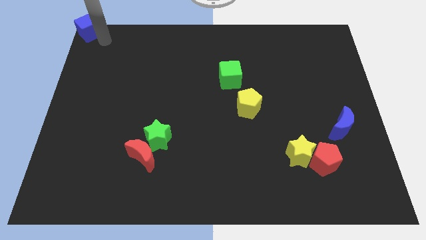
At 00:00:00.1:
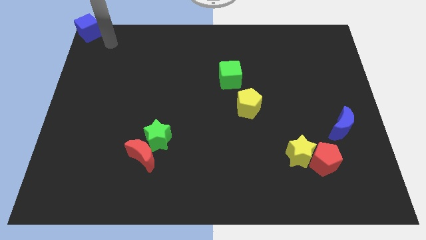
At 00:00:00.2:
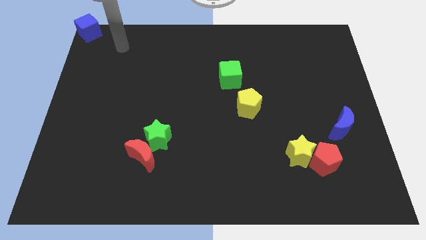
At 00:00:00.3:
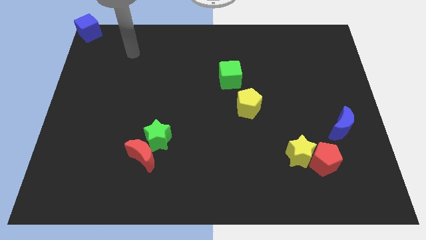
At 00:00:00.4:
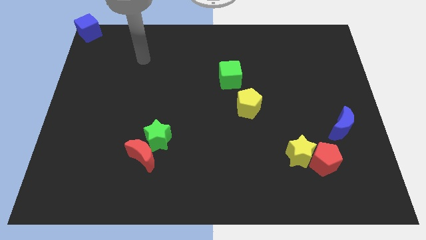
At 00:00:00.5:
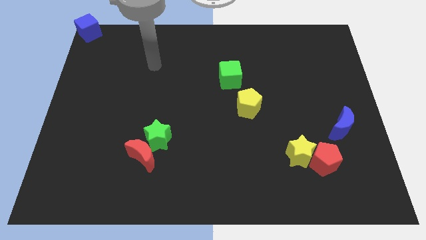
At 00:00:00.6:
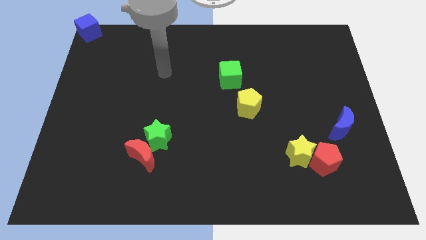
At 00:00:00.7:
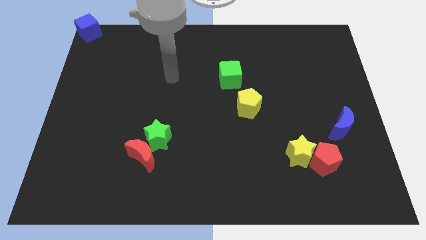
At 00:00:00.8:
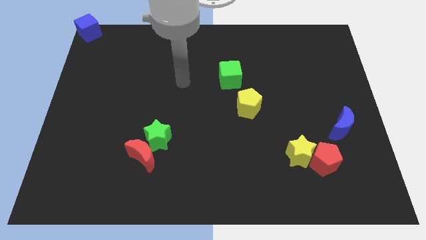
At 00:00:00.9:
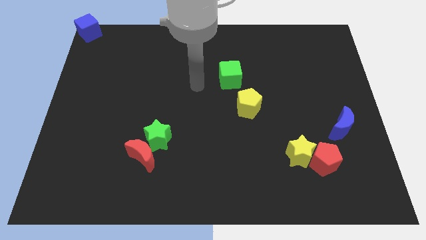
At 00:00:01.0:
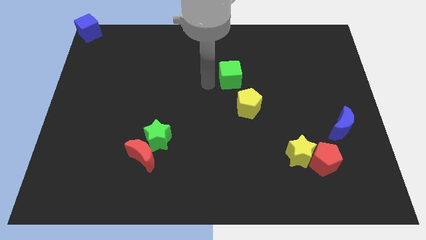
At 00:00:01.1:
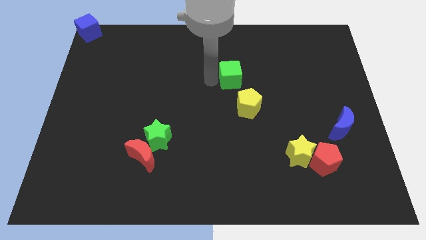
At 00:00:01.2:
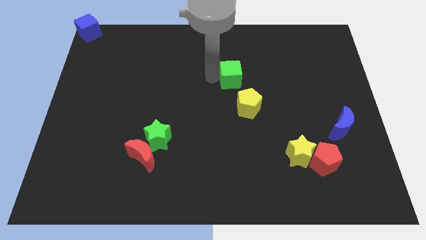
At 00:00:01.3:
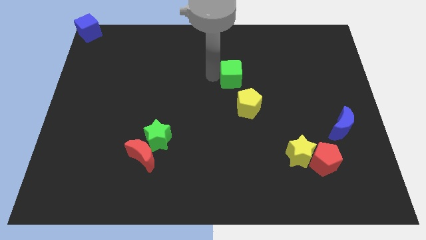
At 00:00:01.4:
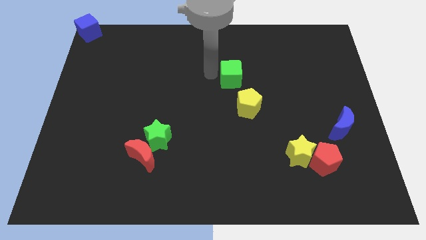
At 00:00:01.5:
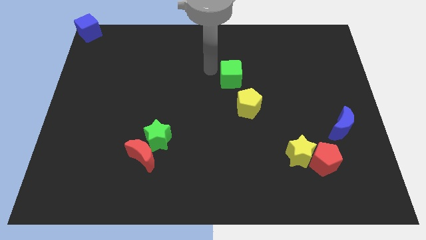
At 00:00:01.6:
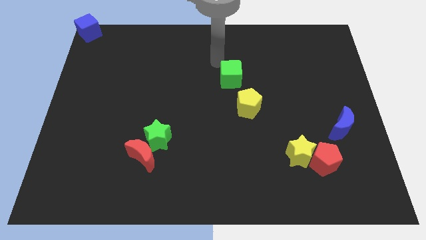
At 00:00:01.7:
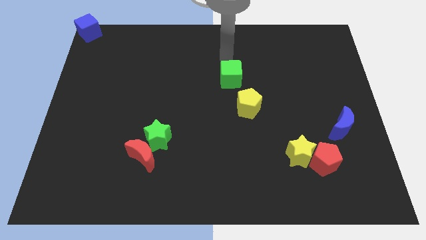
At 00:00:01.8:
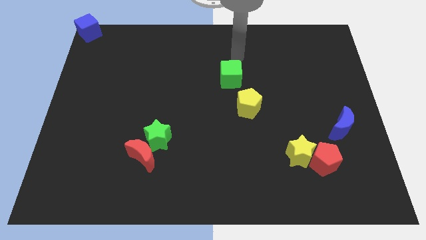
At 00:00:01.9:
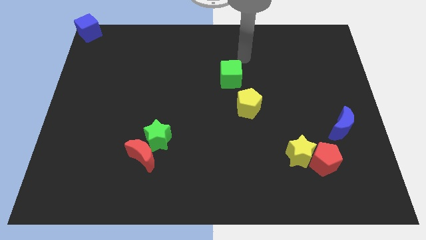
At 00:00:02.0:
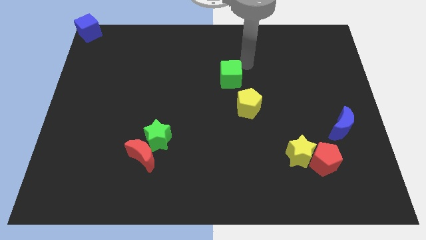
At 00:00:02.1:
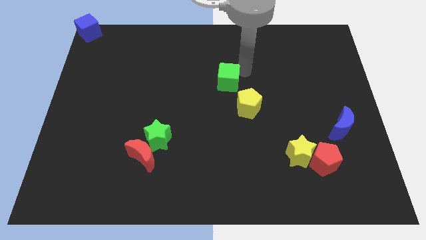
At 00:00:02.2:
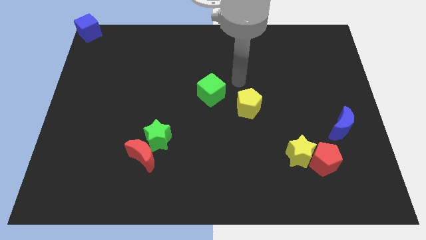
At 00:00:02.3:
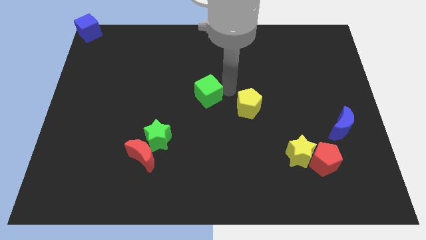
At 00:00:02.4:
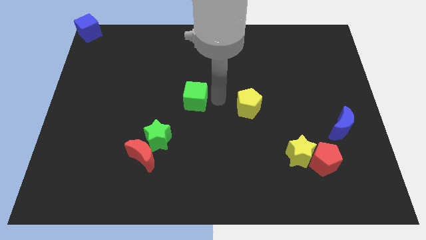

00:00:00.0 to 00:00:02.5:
move the green cube to the center of the board

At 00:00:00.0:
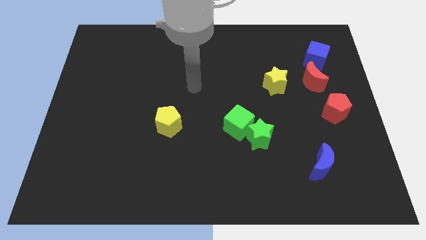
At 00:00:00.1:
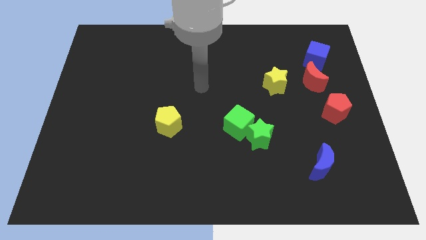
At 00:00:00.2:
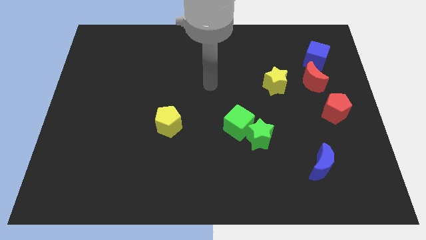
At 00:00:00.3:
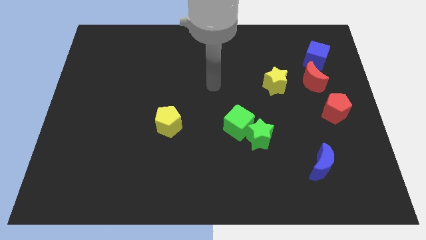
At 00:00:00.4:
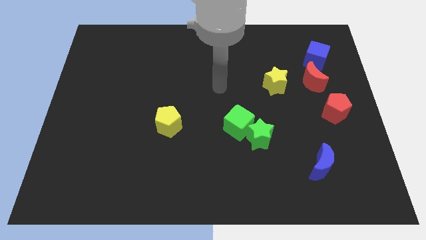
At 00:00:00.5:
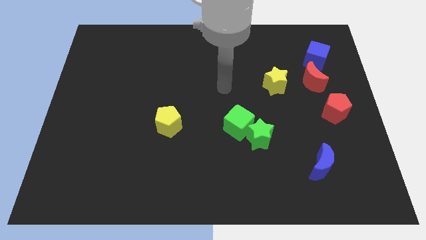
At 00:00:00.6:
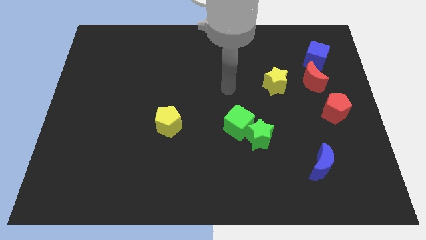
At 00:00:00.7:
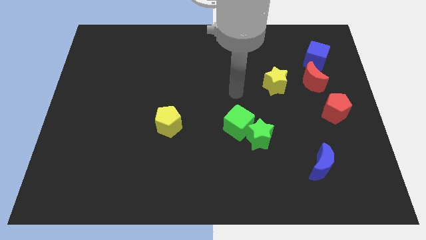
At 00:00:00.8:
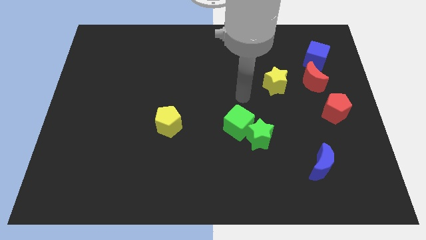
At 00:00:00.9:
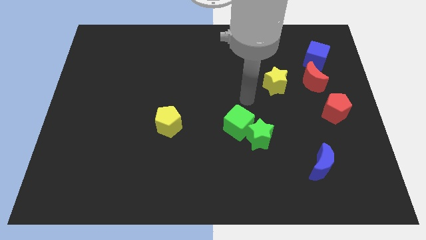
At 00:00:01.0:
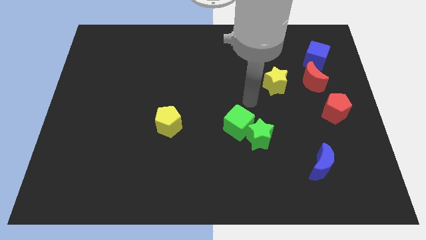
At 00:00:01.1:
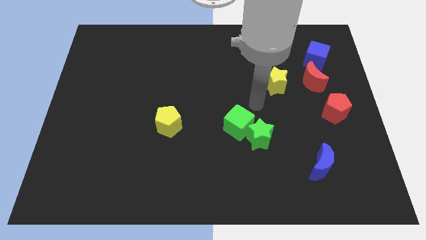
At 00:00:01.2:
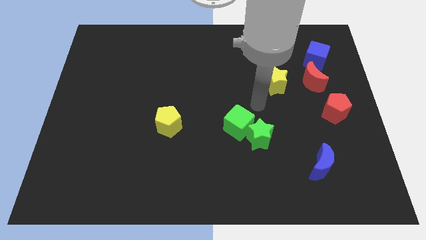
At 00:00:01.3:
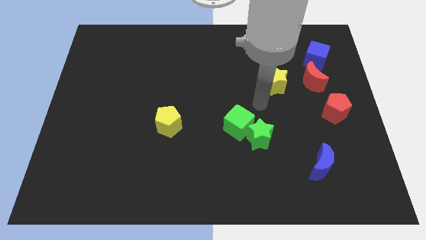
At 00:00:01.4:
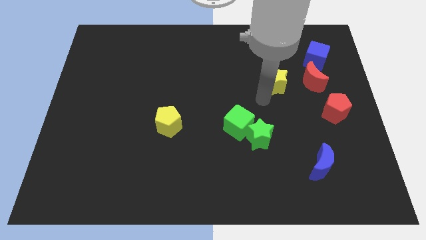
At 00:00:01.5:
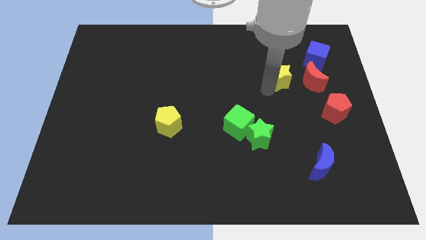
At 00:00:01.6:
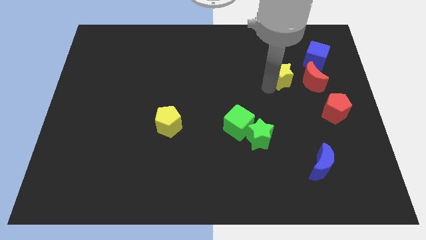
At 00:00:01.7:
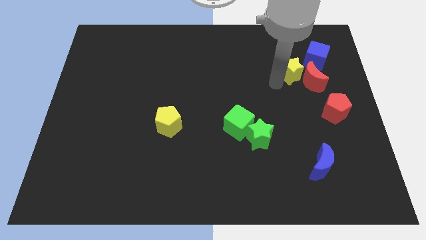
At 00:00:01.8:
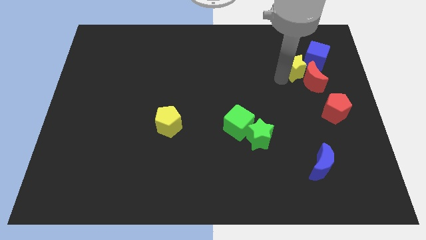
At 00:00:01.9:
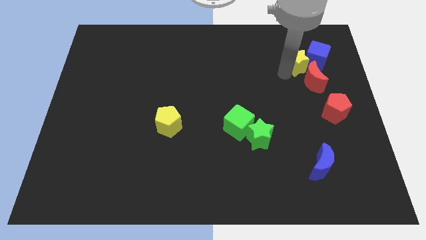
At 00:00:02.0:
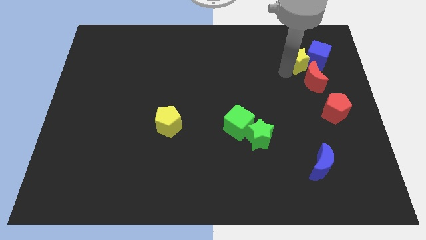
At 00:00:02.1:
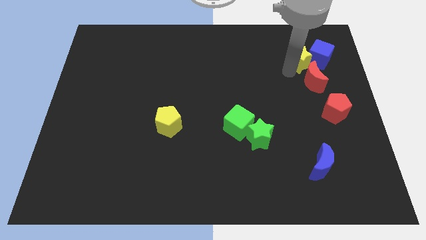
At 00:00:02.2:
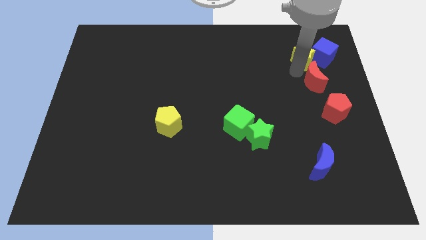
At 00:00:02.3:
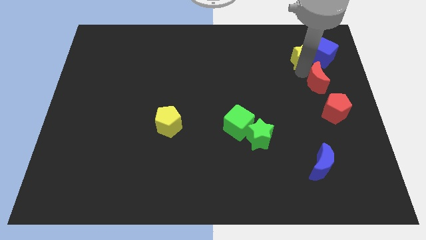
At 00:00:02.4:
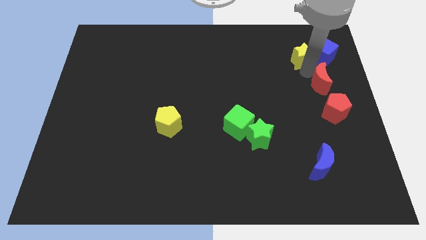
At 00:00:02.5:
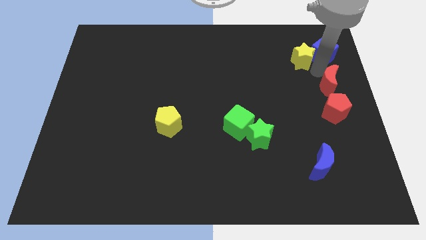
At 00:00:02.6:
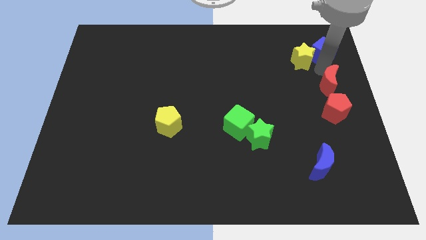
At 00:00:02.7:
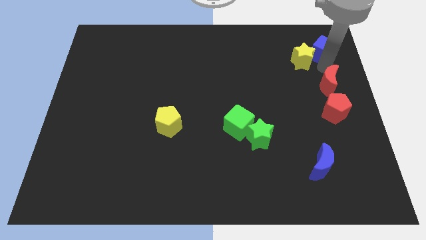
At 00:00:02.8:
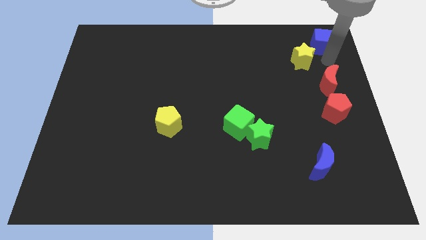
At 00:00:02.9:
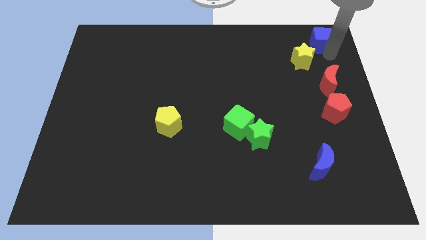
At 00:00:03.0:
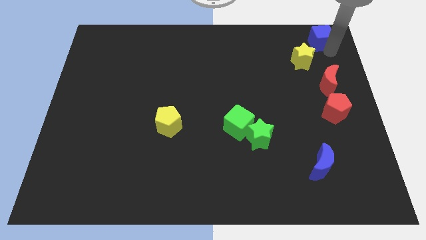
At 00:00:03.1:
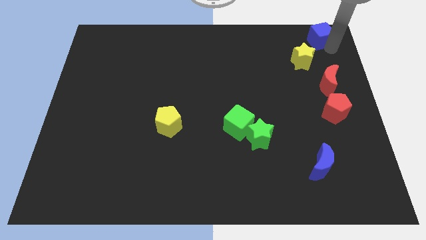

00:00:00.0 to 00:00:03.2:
move blue cube to top right corner of the board

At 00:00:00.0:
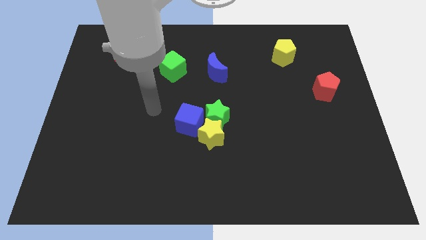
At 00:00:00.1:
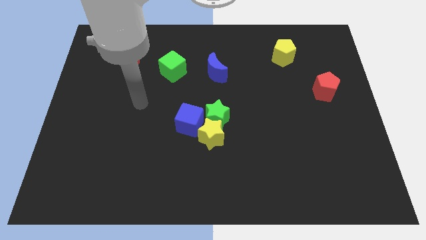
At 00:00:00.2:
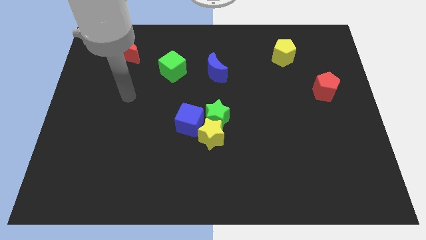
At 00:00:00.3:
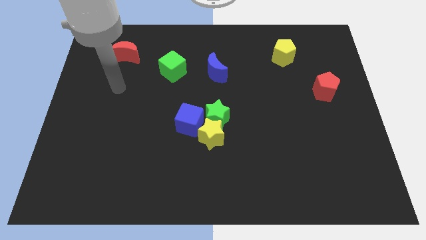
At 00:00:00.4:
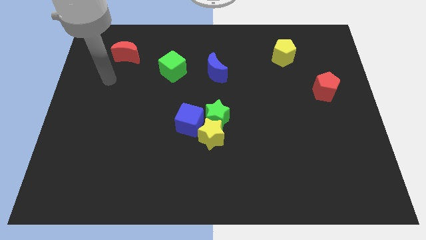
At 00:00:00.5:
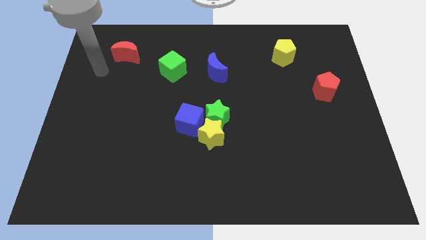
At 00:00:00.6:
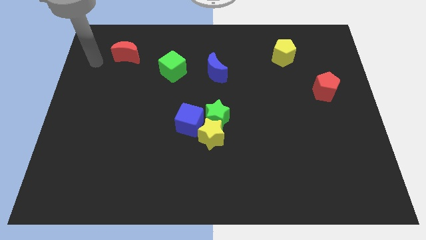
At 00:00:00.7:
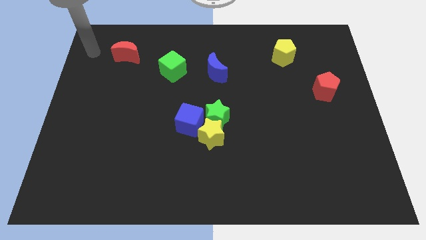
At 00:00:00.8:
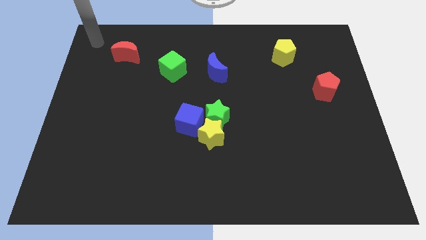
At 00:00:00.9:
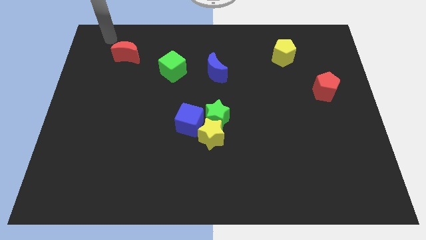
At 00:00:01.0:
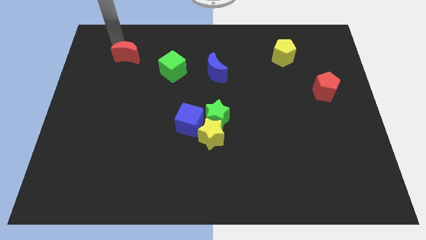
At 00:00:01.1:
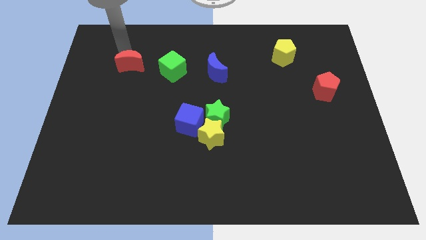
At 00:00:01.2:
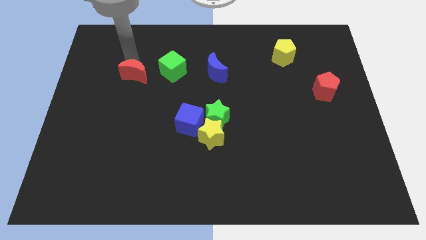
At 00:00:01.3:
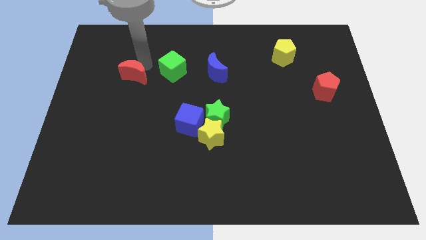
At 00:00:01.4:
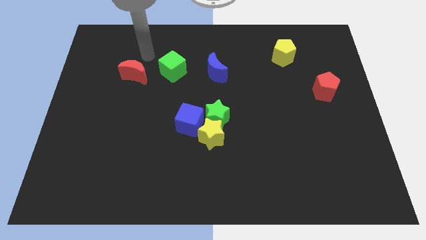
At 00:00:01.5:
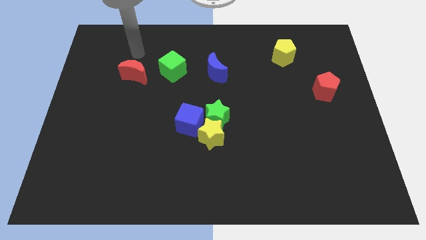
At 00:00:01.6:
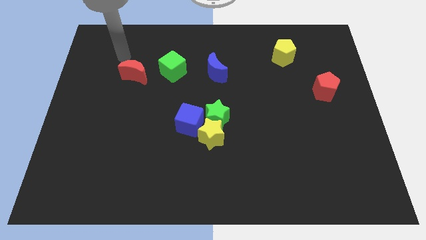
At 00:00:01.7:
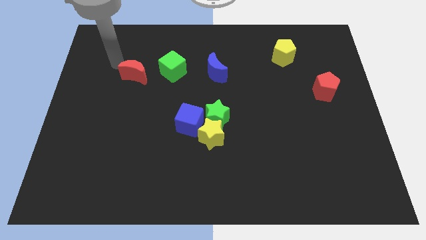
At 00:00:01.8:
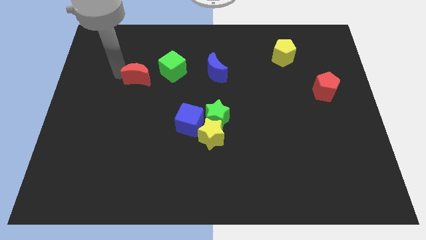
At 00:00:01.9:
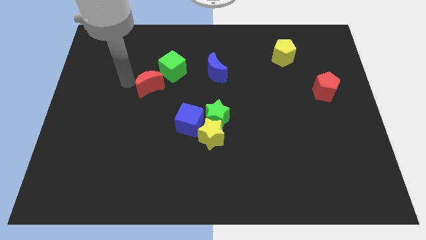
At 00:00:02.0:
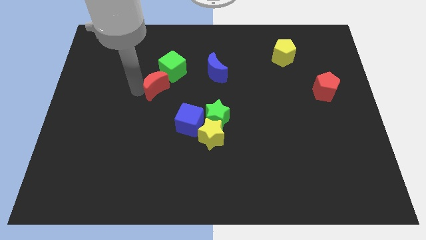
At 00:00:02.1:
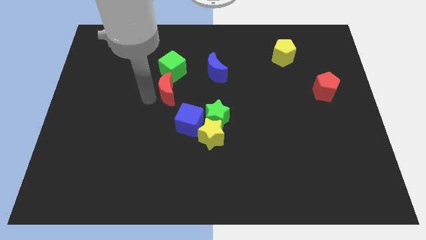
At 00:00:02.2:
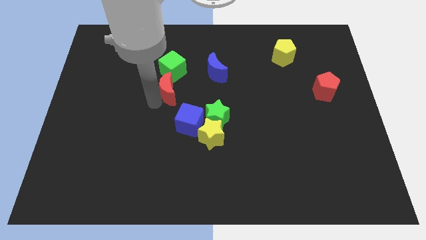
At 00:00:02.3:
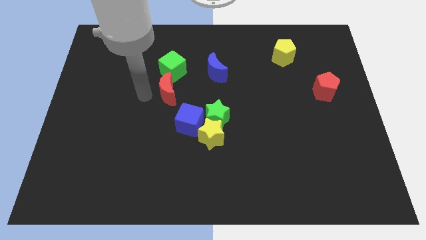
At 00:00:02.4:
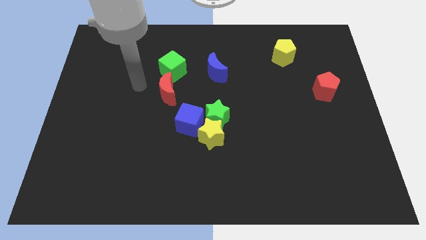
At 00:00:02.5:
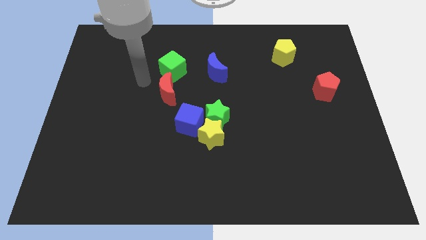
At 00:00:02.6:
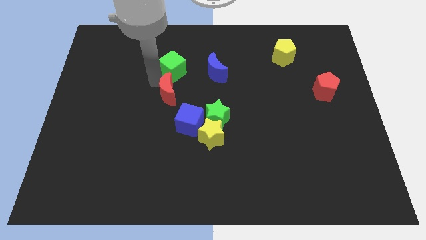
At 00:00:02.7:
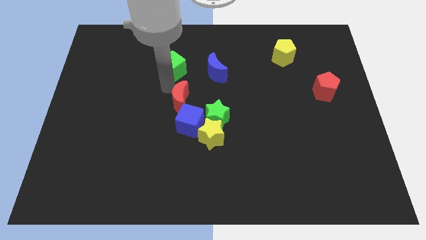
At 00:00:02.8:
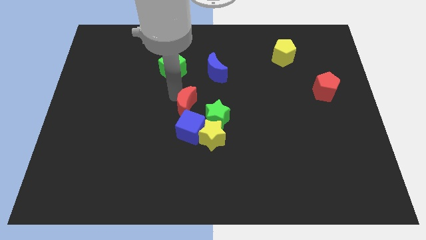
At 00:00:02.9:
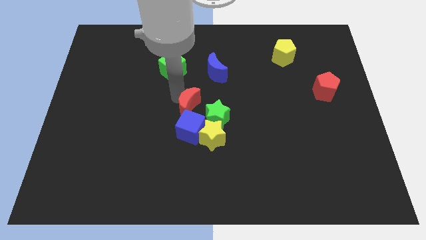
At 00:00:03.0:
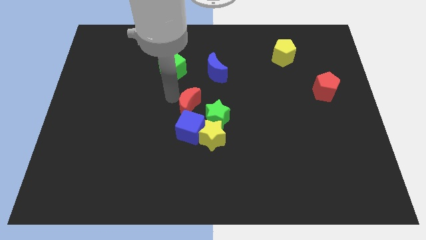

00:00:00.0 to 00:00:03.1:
push red crescent into the blue cube to the center of the board

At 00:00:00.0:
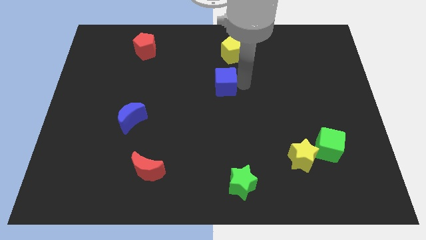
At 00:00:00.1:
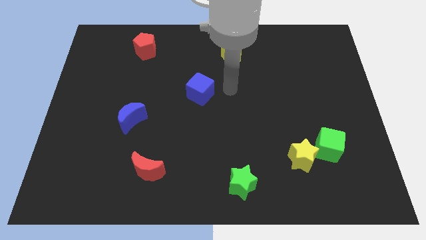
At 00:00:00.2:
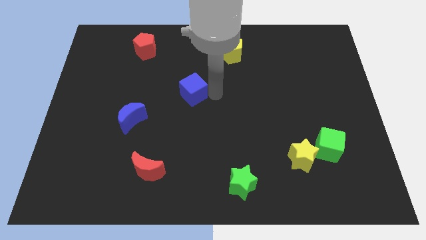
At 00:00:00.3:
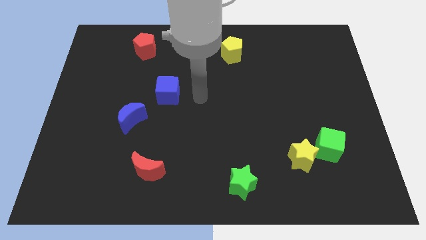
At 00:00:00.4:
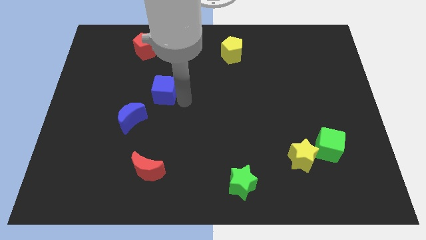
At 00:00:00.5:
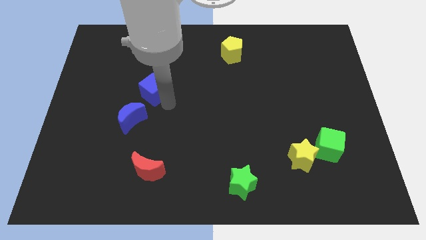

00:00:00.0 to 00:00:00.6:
place the blue cube at the top right side of blue crescent
